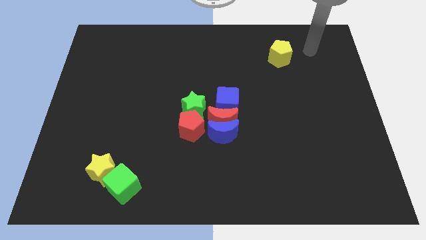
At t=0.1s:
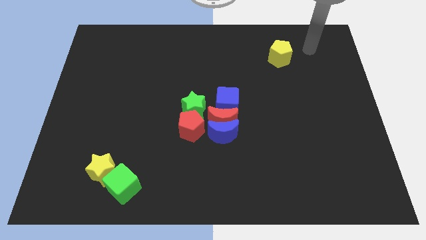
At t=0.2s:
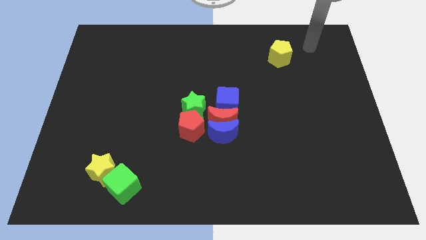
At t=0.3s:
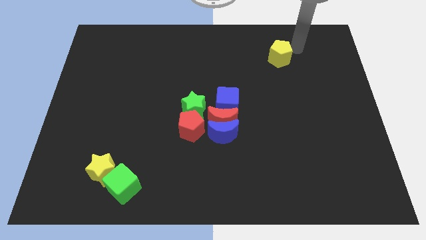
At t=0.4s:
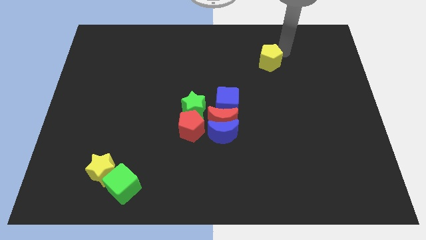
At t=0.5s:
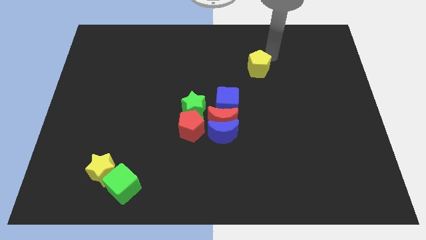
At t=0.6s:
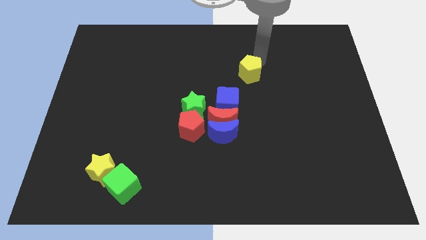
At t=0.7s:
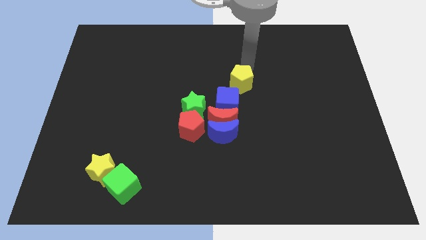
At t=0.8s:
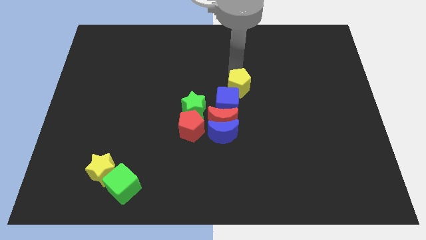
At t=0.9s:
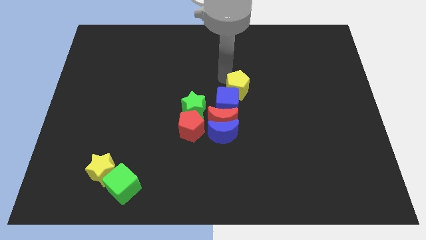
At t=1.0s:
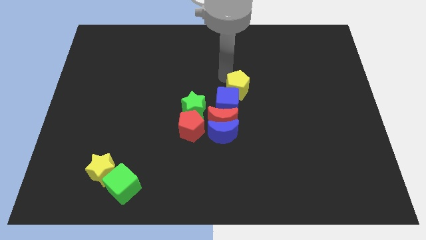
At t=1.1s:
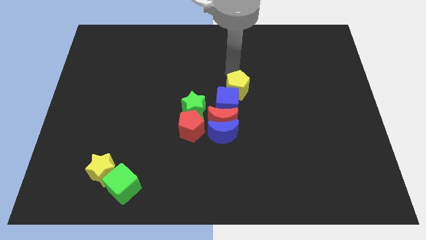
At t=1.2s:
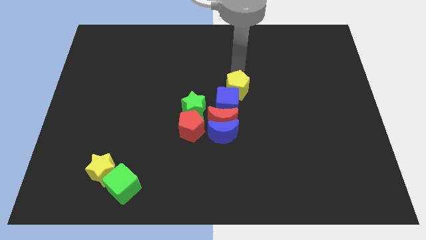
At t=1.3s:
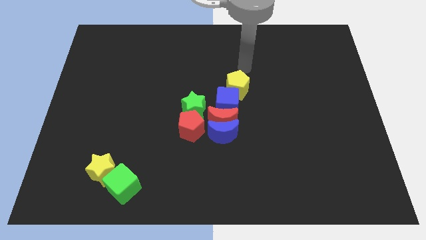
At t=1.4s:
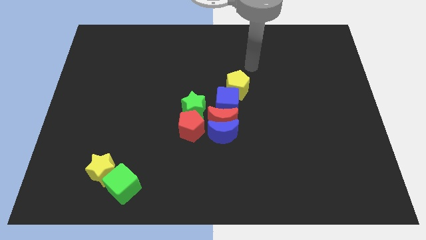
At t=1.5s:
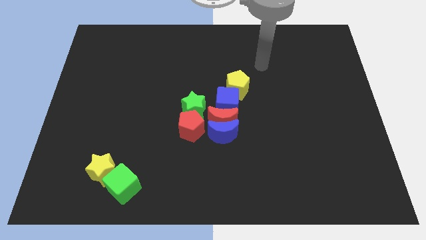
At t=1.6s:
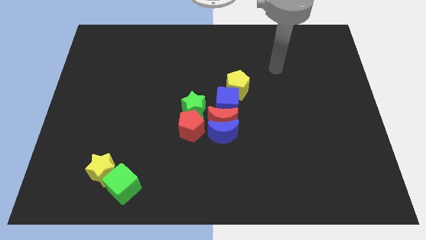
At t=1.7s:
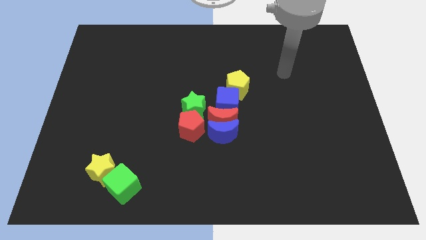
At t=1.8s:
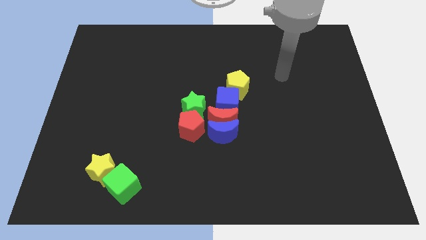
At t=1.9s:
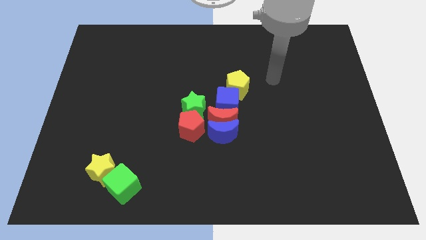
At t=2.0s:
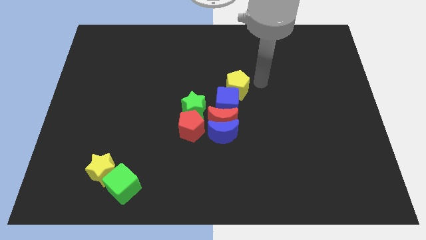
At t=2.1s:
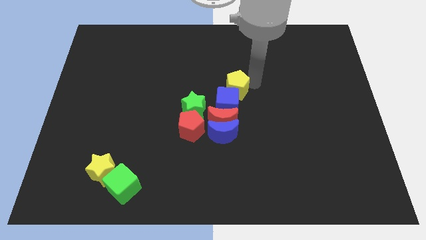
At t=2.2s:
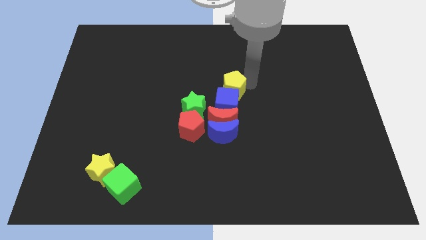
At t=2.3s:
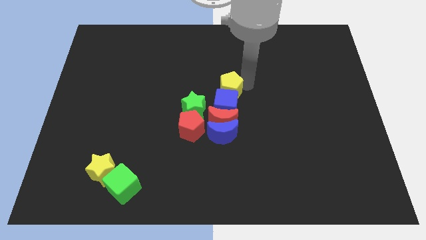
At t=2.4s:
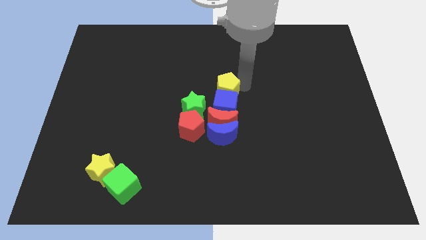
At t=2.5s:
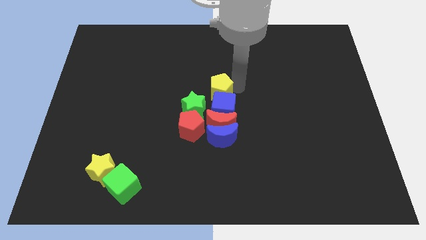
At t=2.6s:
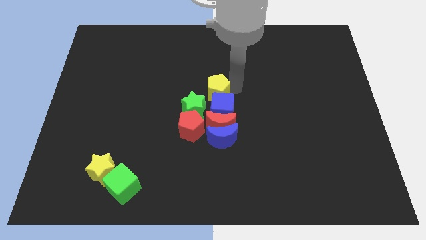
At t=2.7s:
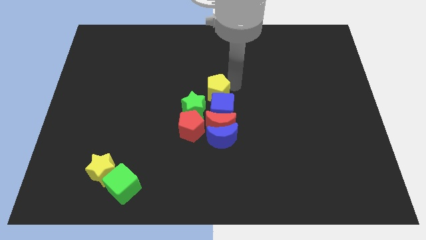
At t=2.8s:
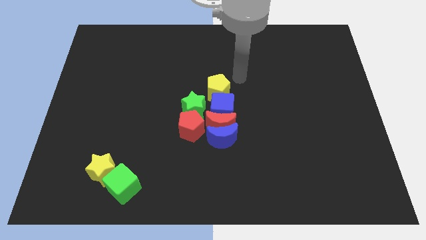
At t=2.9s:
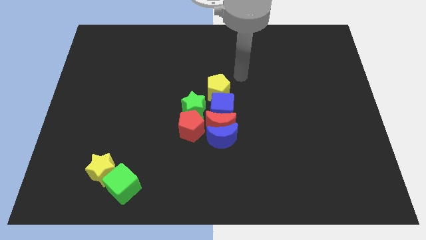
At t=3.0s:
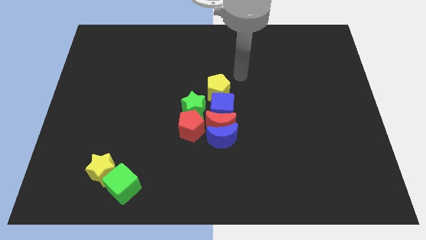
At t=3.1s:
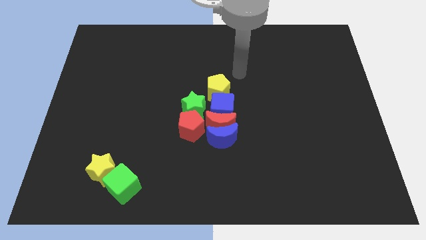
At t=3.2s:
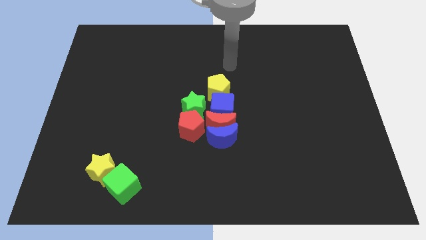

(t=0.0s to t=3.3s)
push the yellow pentagon to the top of the blue cube

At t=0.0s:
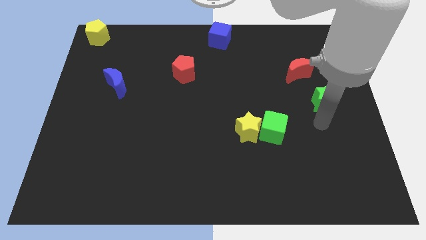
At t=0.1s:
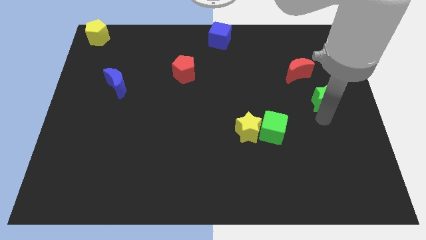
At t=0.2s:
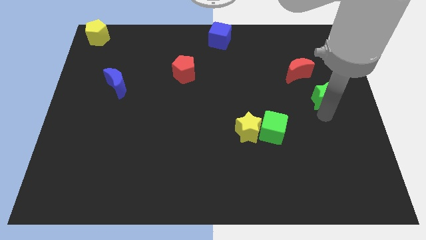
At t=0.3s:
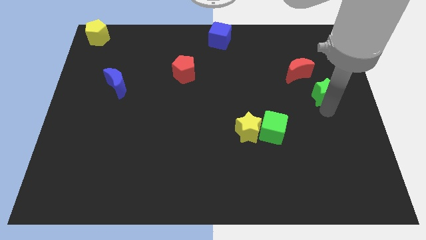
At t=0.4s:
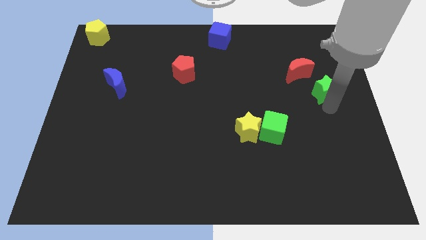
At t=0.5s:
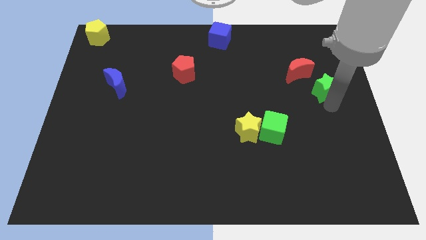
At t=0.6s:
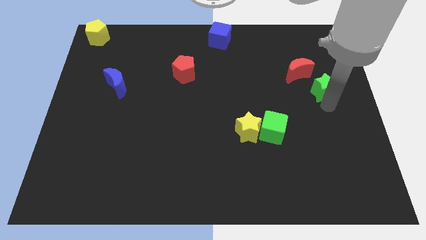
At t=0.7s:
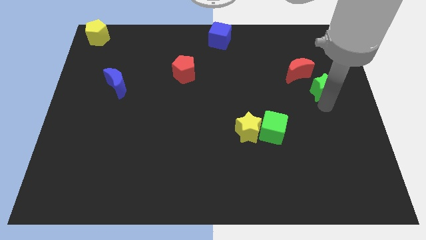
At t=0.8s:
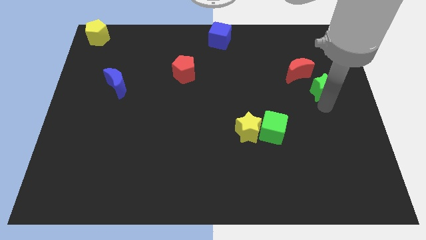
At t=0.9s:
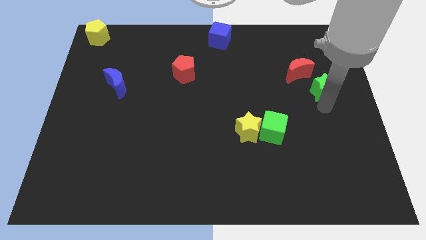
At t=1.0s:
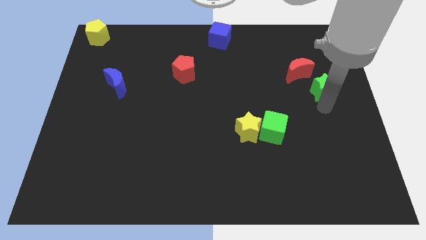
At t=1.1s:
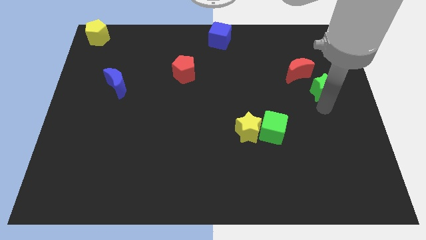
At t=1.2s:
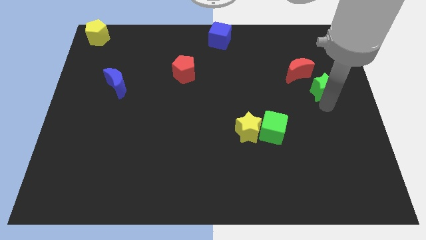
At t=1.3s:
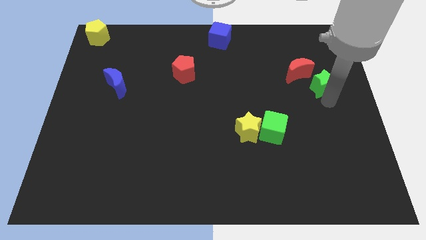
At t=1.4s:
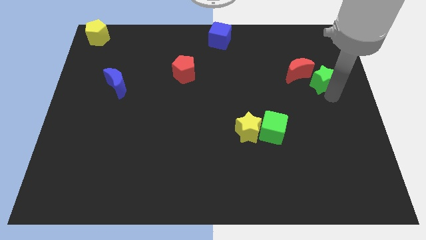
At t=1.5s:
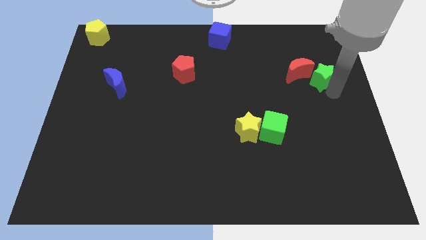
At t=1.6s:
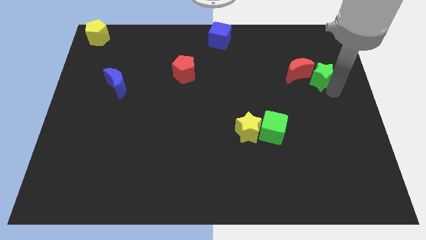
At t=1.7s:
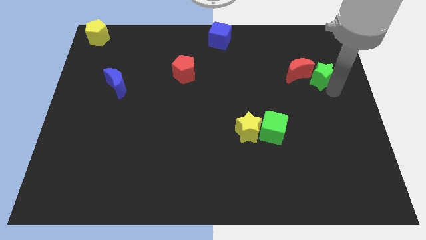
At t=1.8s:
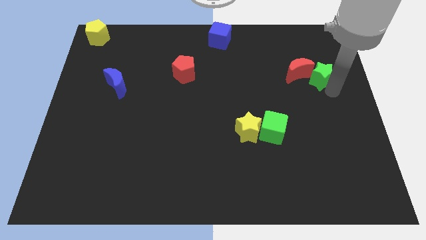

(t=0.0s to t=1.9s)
place the green star near red moon

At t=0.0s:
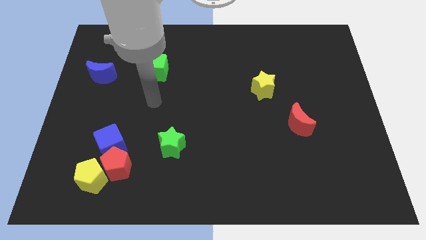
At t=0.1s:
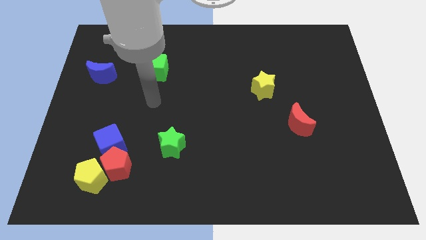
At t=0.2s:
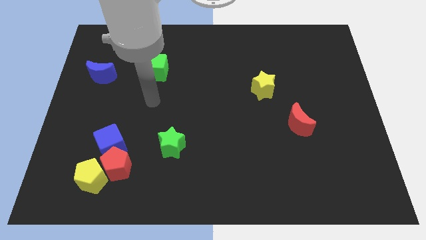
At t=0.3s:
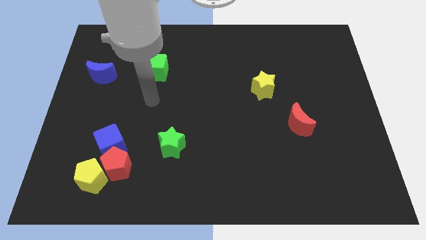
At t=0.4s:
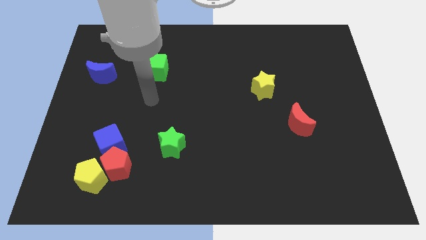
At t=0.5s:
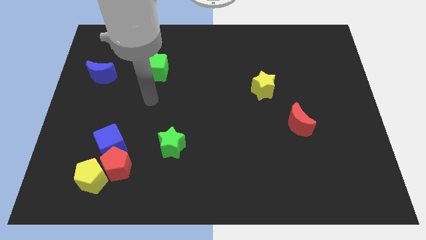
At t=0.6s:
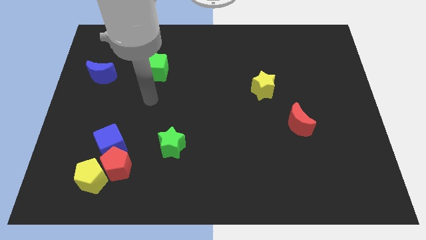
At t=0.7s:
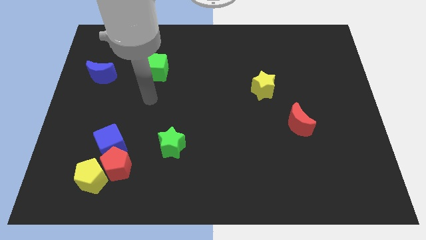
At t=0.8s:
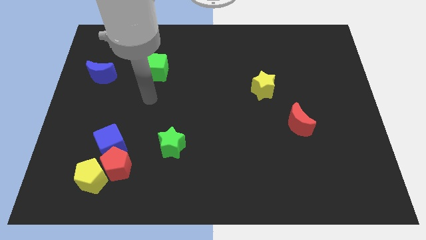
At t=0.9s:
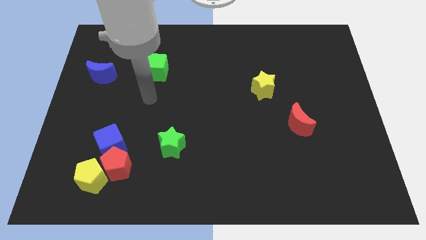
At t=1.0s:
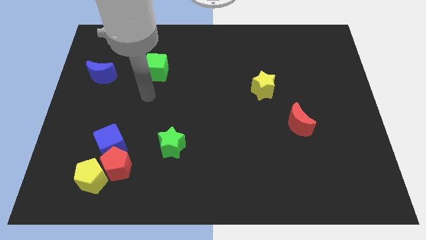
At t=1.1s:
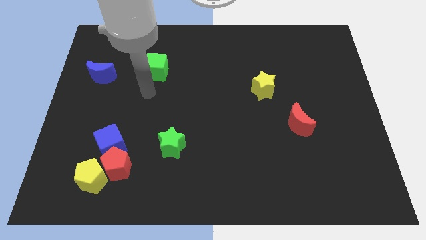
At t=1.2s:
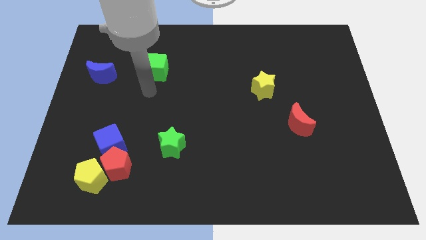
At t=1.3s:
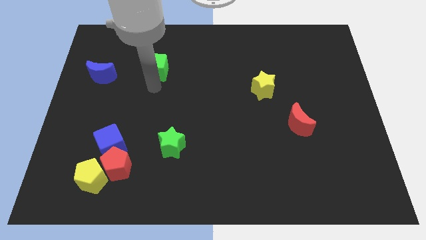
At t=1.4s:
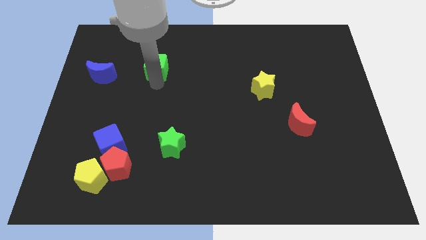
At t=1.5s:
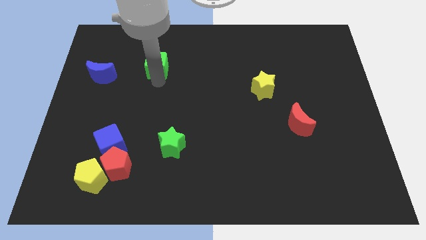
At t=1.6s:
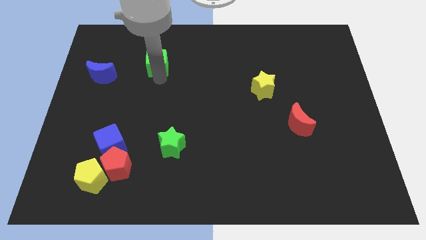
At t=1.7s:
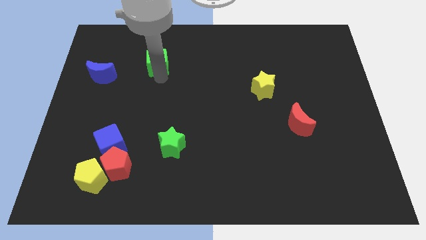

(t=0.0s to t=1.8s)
push green cube slightly towards up

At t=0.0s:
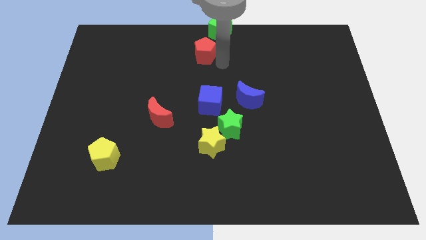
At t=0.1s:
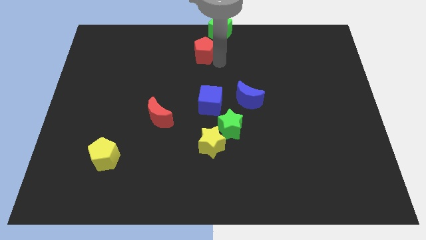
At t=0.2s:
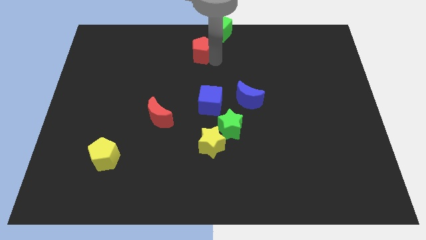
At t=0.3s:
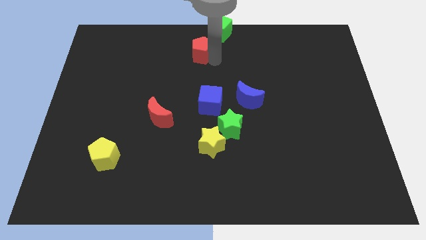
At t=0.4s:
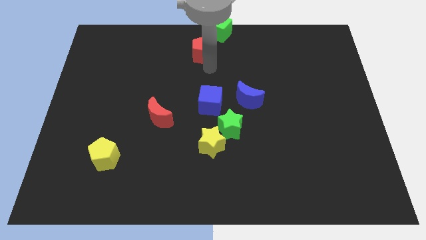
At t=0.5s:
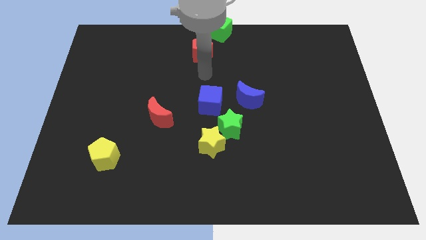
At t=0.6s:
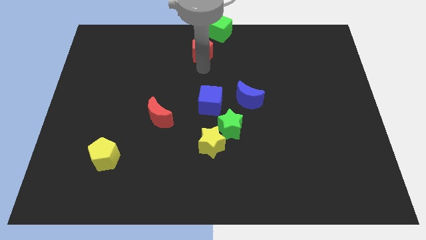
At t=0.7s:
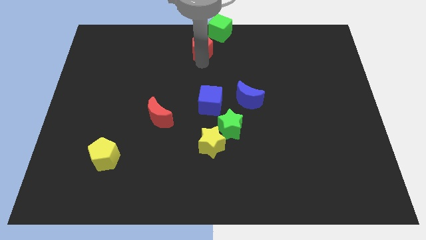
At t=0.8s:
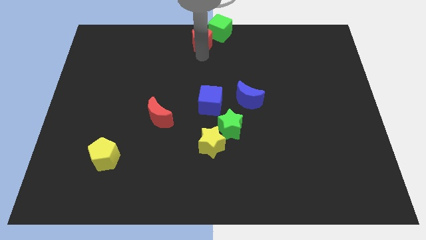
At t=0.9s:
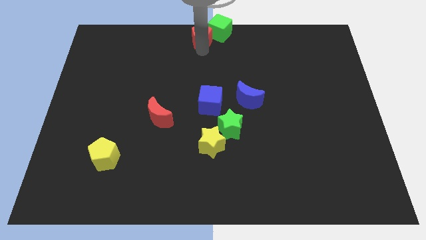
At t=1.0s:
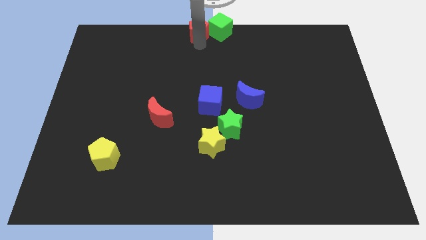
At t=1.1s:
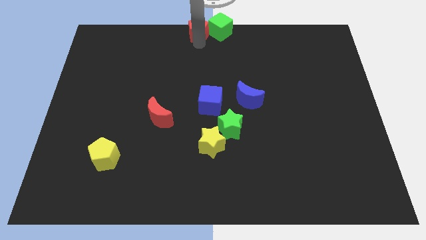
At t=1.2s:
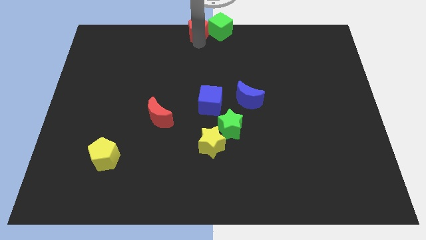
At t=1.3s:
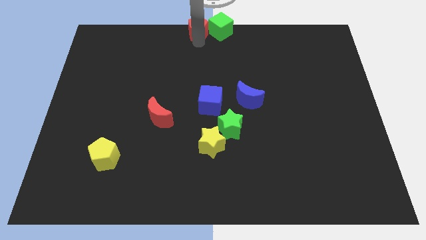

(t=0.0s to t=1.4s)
put the red pentagon on the left side of the green cube

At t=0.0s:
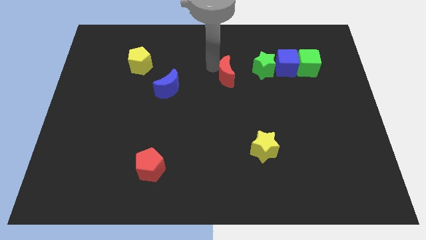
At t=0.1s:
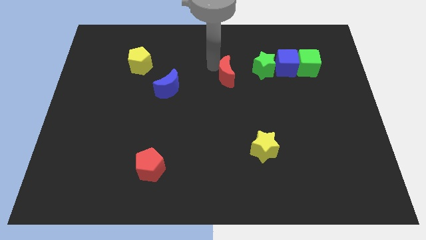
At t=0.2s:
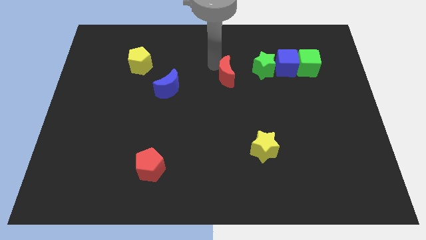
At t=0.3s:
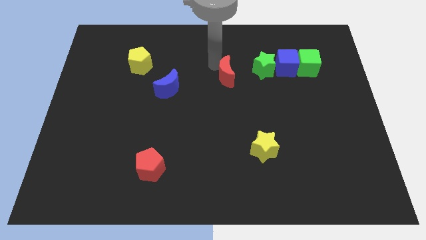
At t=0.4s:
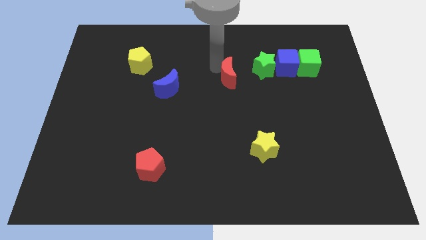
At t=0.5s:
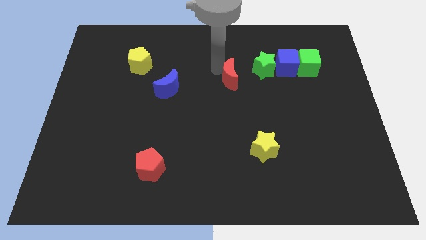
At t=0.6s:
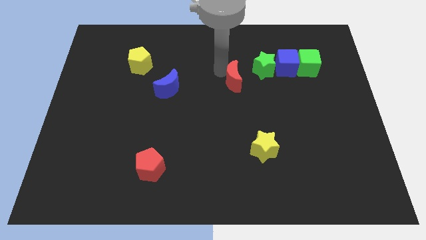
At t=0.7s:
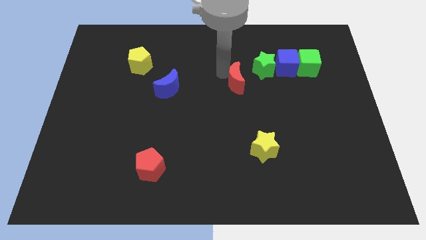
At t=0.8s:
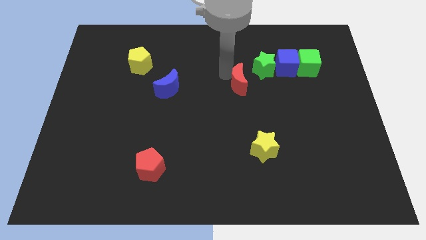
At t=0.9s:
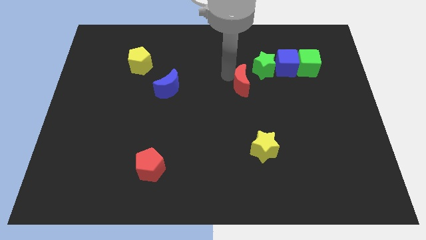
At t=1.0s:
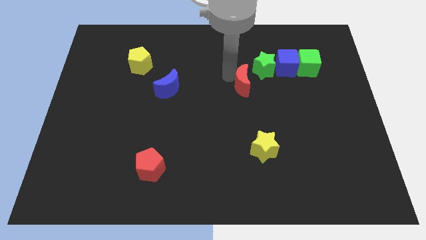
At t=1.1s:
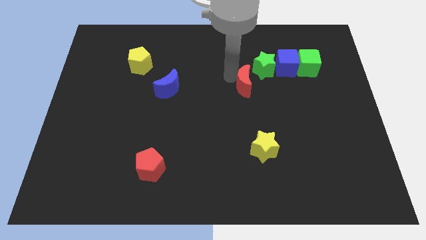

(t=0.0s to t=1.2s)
push red crescent to the bottom left side of the green star
